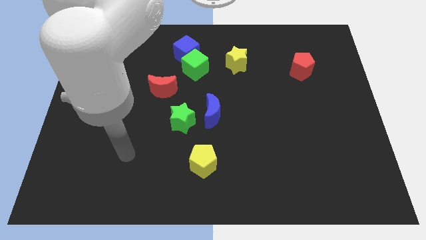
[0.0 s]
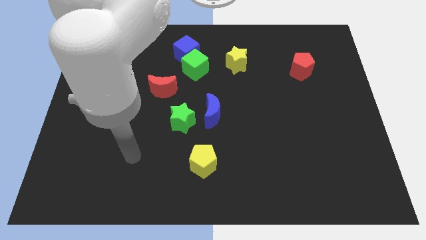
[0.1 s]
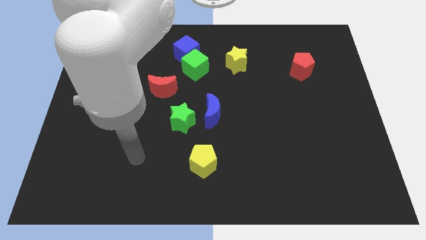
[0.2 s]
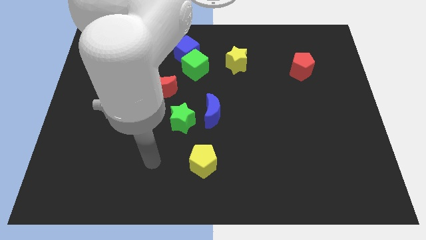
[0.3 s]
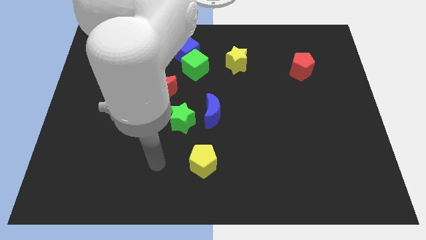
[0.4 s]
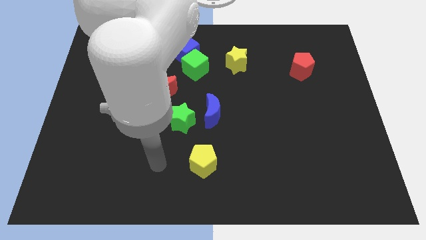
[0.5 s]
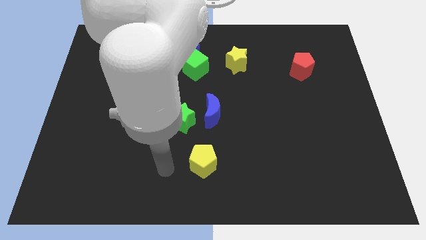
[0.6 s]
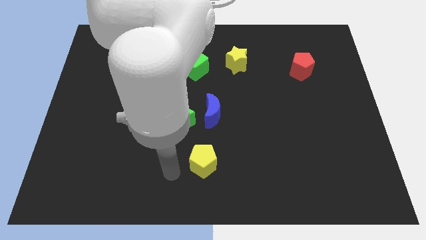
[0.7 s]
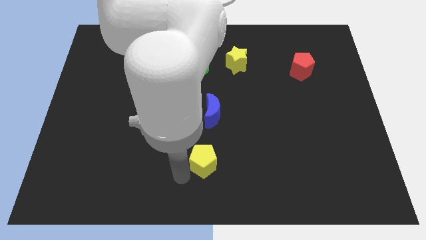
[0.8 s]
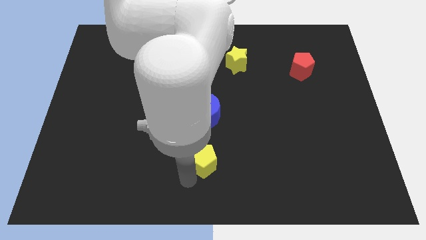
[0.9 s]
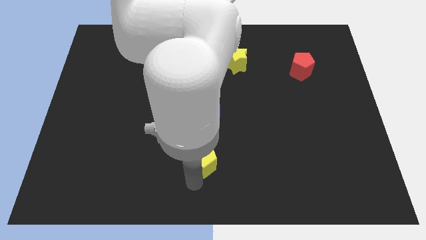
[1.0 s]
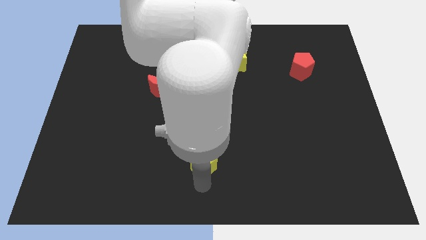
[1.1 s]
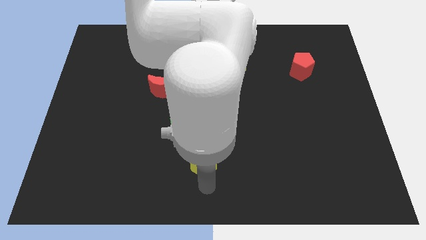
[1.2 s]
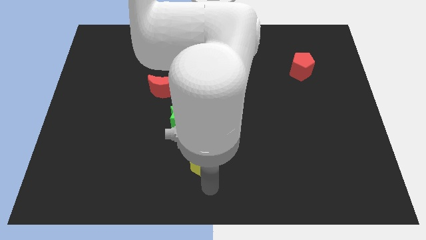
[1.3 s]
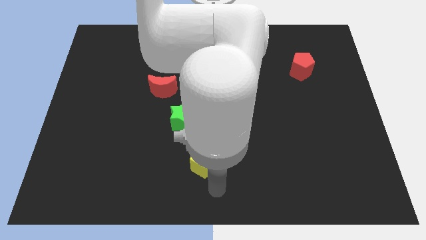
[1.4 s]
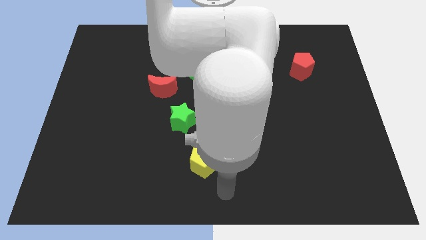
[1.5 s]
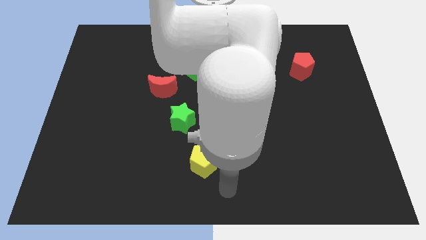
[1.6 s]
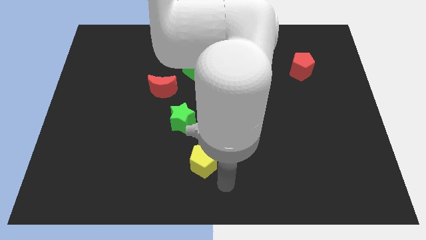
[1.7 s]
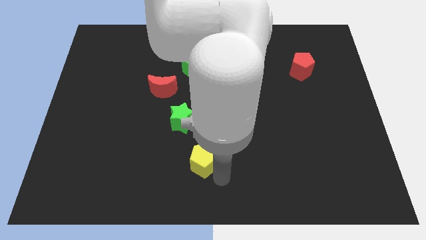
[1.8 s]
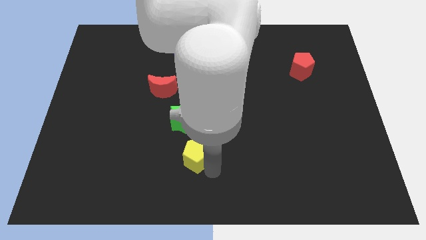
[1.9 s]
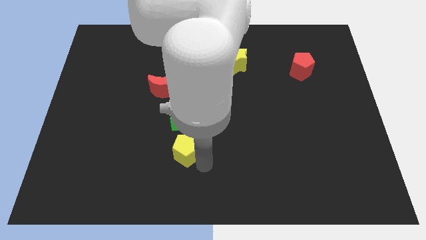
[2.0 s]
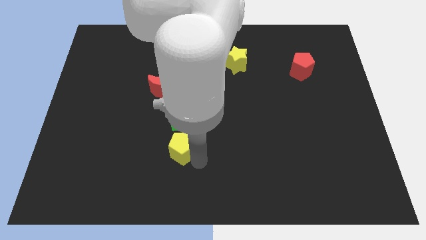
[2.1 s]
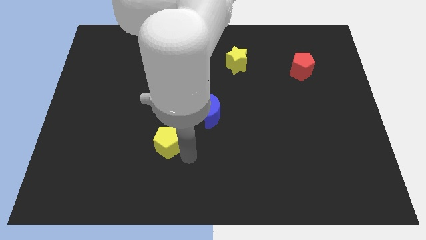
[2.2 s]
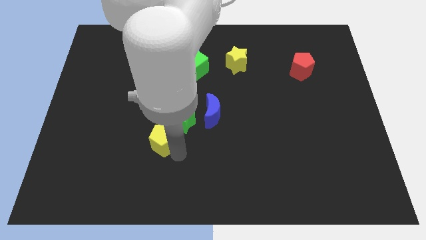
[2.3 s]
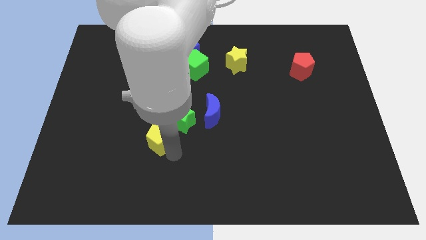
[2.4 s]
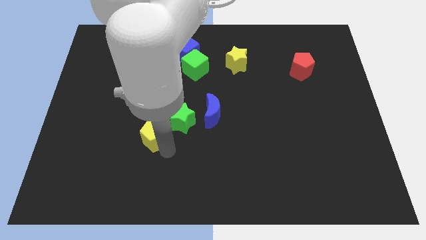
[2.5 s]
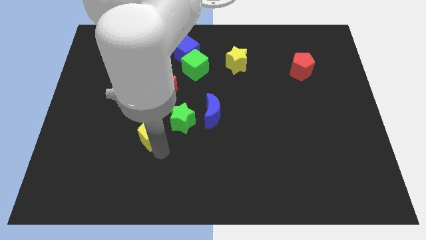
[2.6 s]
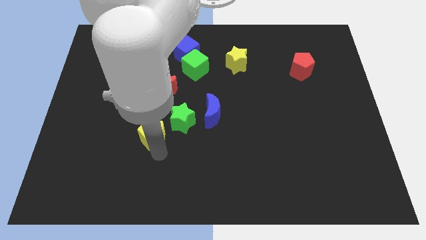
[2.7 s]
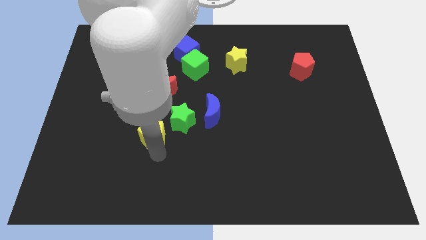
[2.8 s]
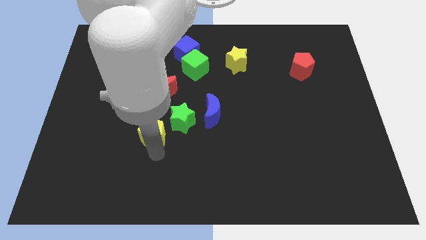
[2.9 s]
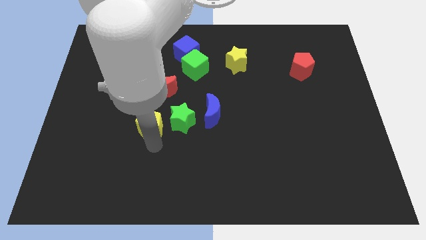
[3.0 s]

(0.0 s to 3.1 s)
slide yellow pentagon to bottom left of green star

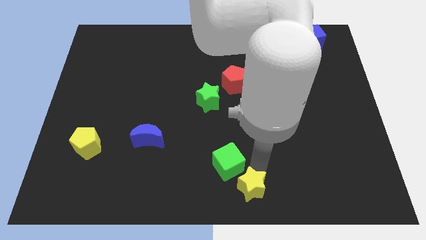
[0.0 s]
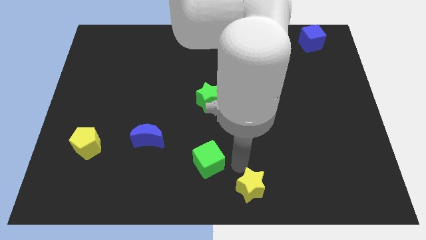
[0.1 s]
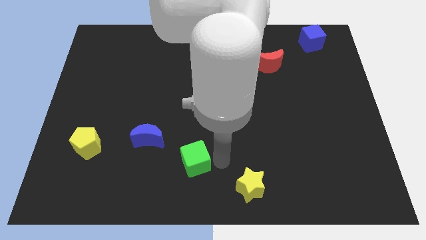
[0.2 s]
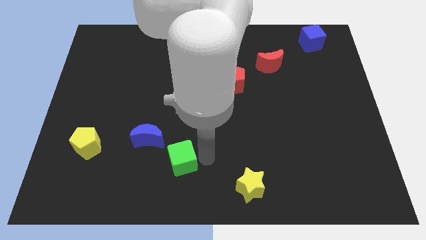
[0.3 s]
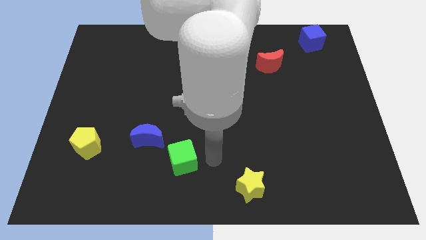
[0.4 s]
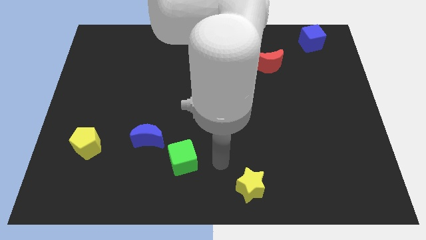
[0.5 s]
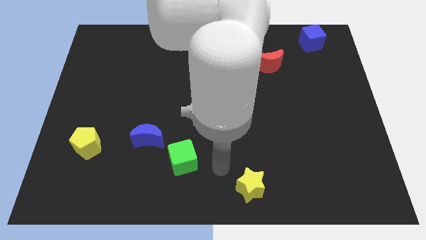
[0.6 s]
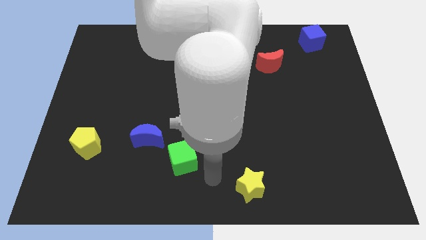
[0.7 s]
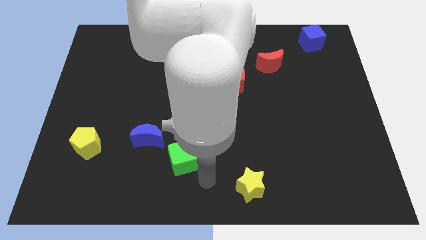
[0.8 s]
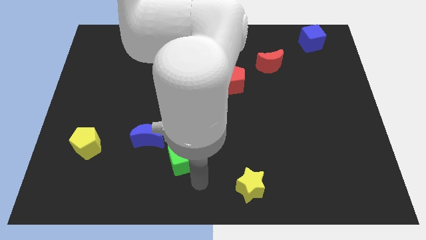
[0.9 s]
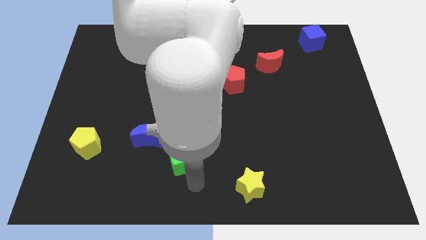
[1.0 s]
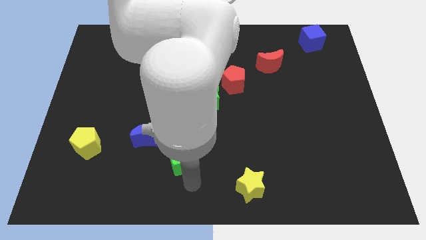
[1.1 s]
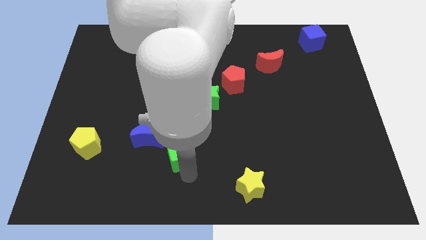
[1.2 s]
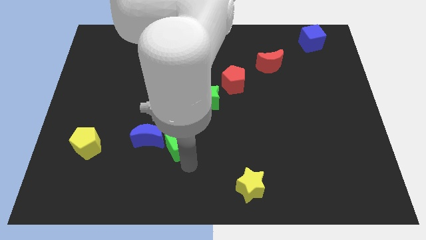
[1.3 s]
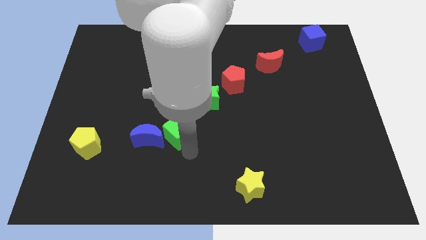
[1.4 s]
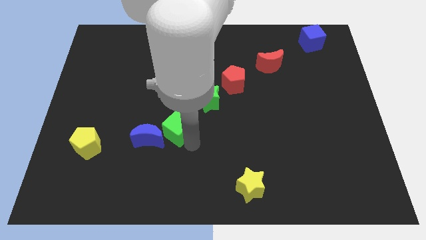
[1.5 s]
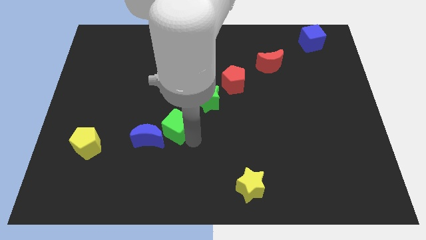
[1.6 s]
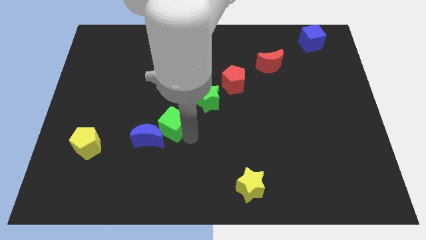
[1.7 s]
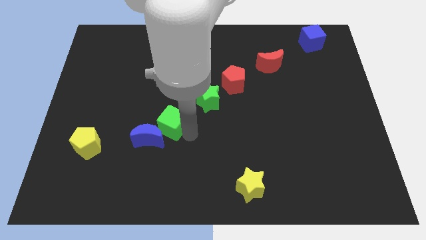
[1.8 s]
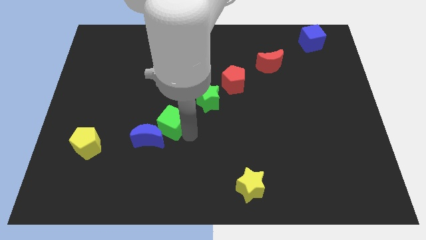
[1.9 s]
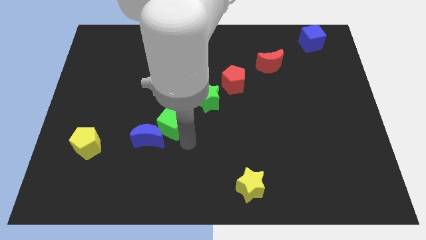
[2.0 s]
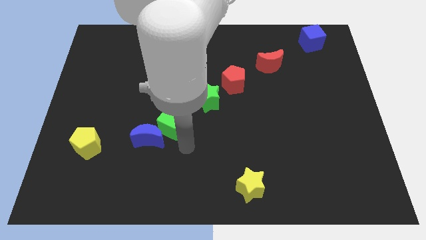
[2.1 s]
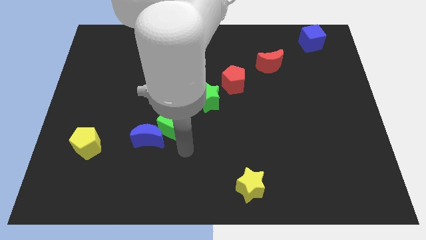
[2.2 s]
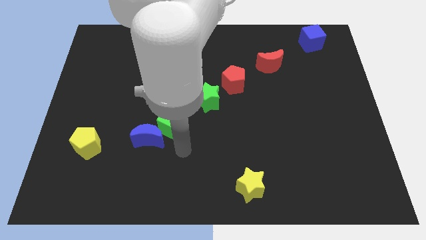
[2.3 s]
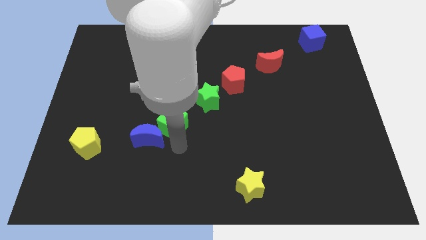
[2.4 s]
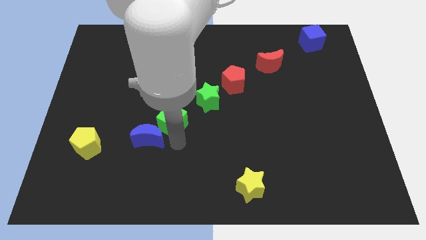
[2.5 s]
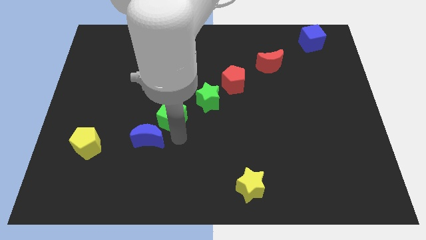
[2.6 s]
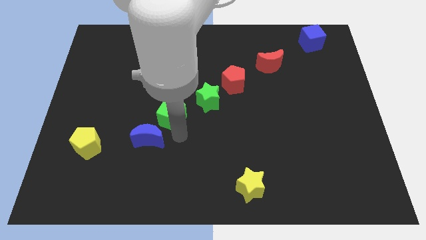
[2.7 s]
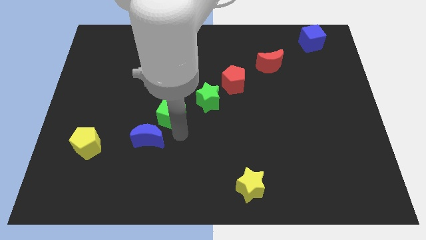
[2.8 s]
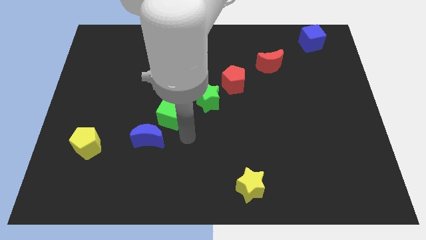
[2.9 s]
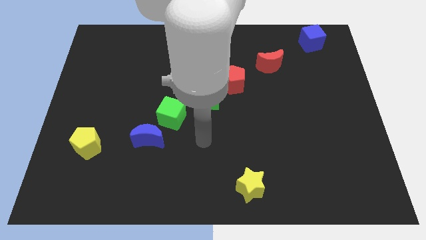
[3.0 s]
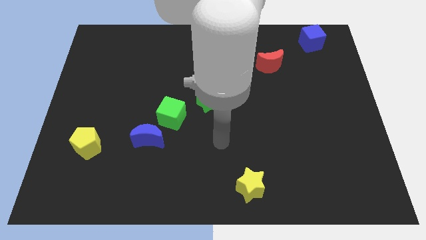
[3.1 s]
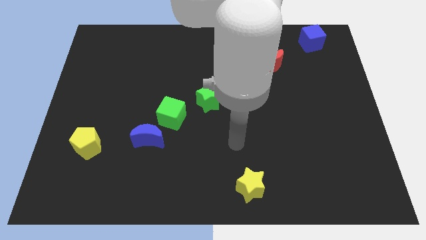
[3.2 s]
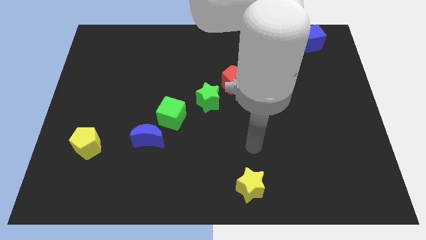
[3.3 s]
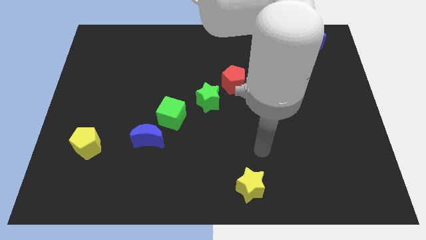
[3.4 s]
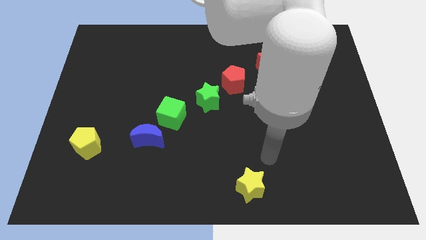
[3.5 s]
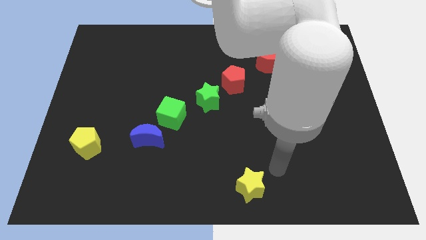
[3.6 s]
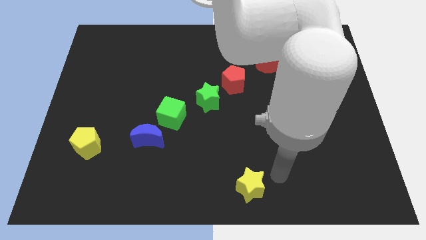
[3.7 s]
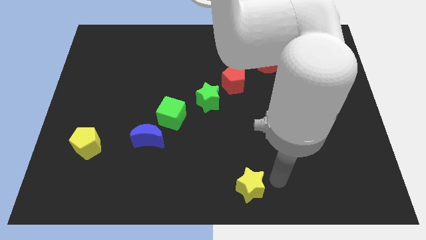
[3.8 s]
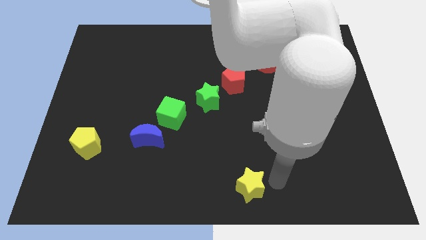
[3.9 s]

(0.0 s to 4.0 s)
place the green cube in between the green star and the blue moon

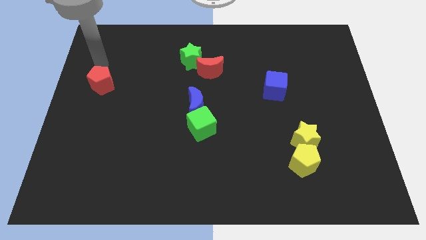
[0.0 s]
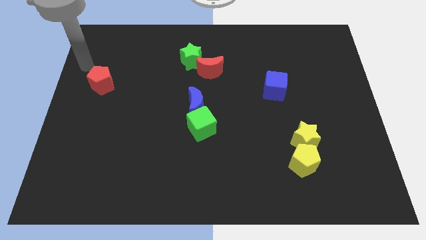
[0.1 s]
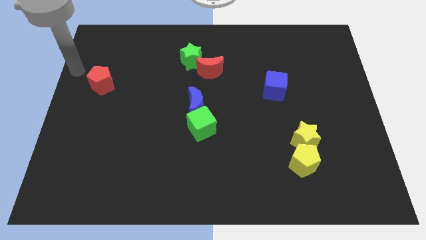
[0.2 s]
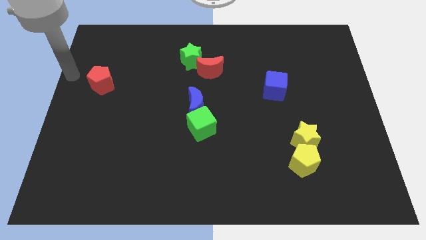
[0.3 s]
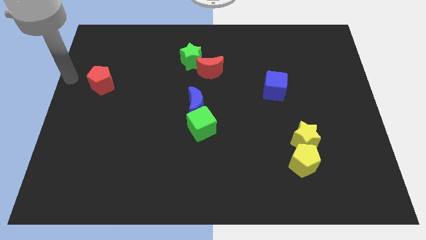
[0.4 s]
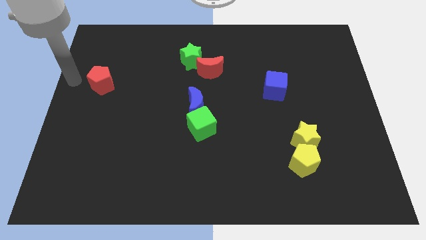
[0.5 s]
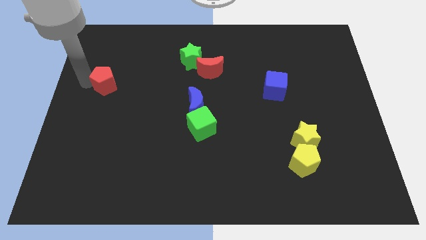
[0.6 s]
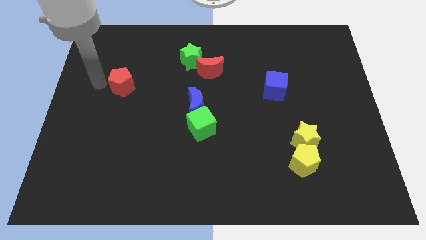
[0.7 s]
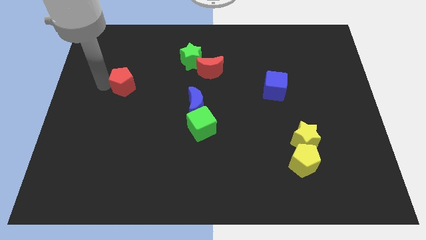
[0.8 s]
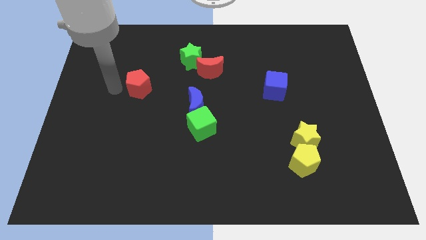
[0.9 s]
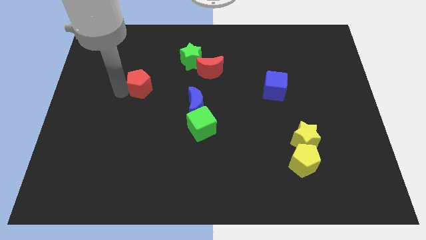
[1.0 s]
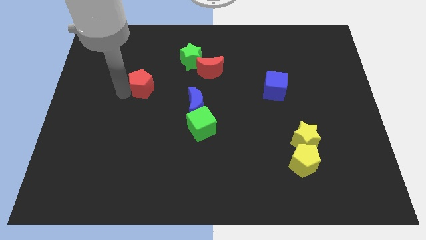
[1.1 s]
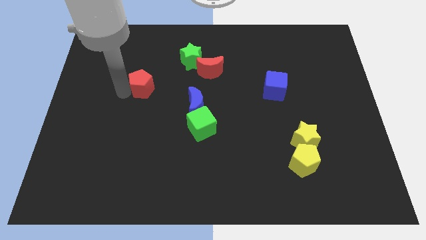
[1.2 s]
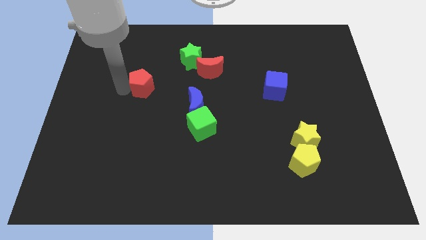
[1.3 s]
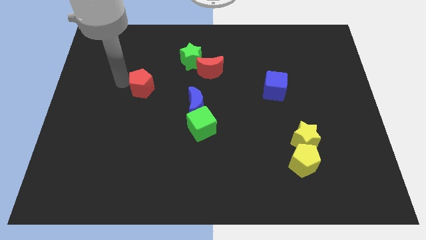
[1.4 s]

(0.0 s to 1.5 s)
push red pentagon slightly to the right

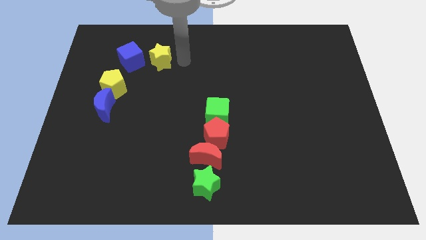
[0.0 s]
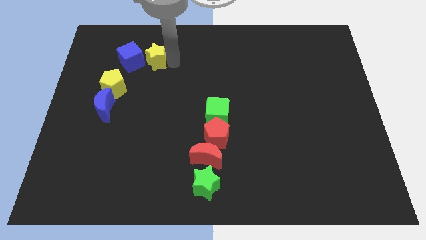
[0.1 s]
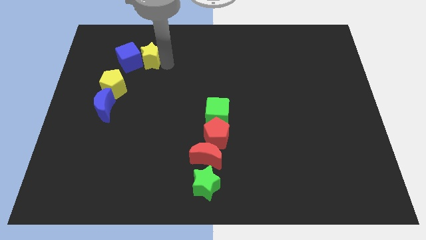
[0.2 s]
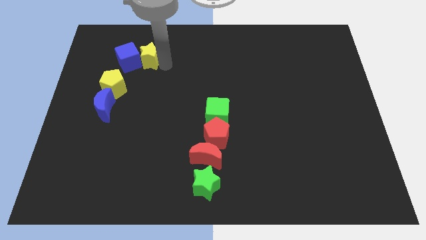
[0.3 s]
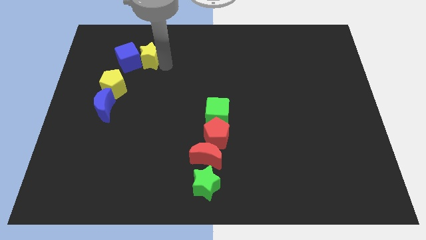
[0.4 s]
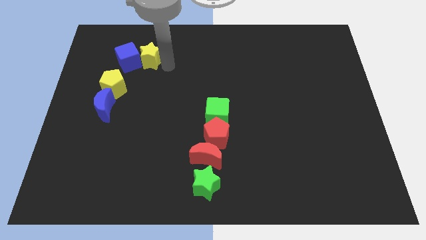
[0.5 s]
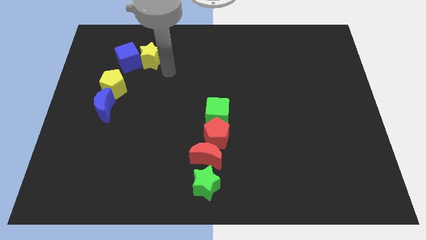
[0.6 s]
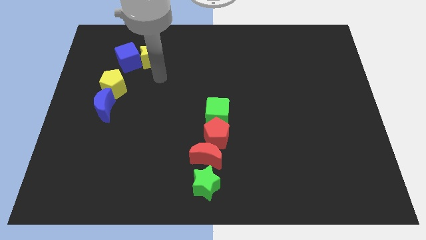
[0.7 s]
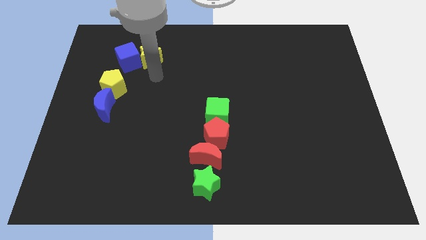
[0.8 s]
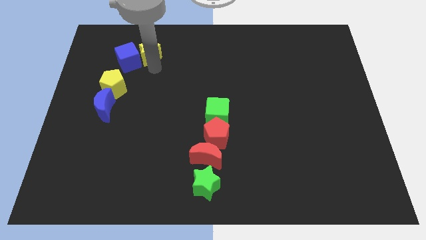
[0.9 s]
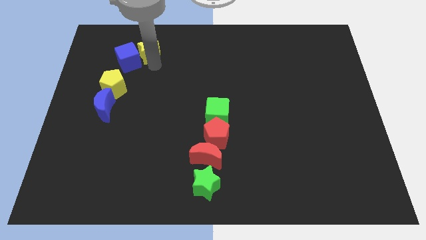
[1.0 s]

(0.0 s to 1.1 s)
place yellow star into the blue cube
